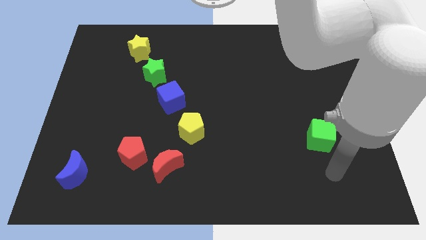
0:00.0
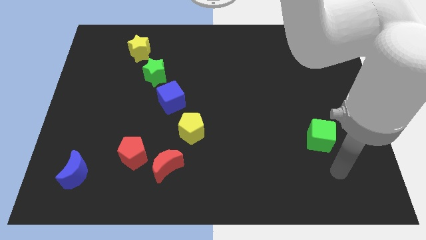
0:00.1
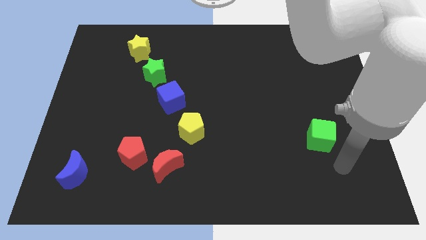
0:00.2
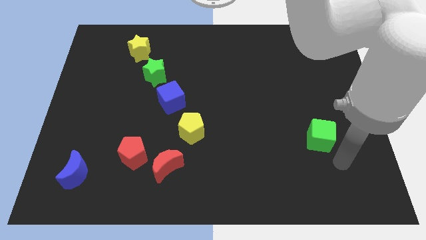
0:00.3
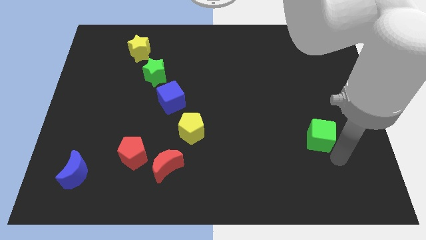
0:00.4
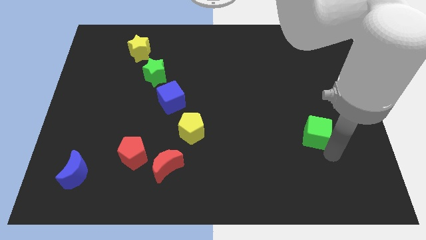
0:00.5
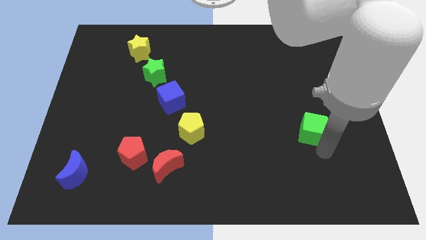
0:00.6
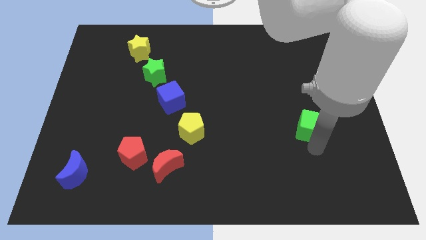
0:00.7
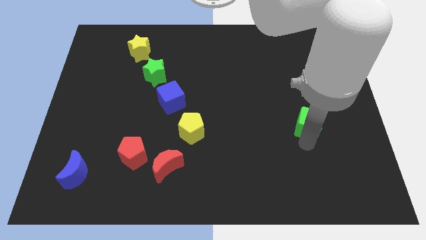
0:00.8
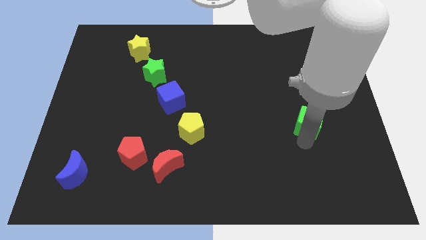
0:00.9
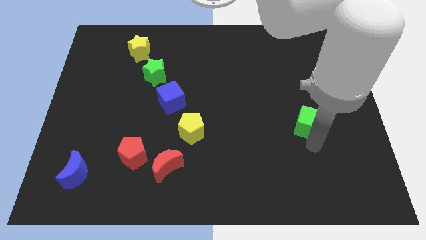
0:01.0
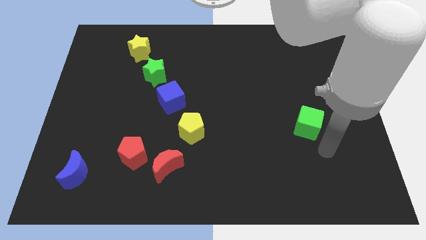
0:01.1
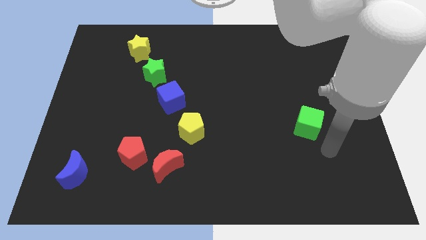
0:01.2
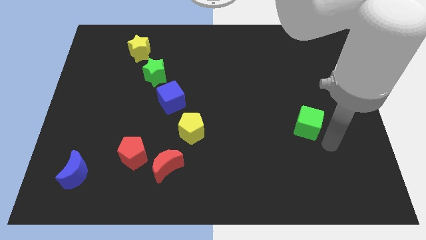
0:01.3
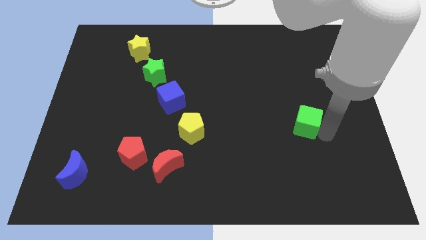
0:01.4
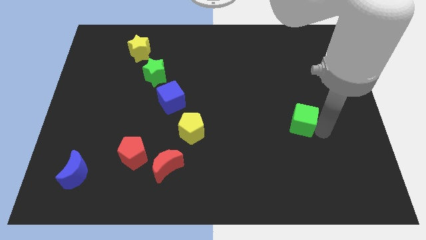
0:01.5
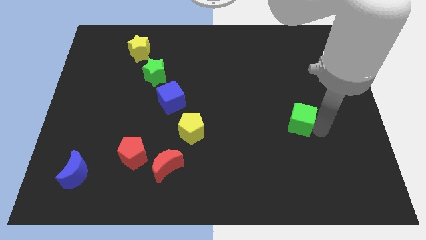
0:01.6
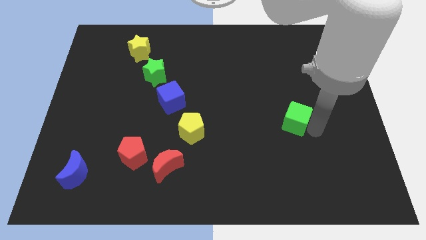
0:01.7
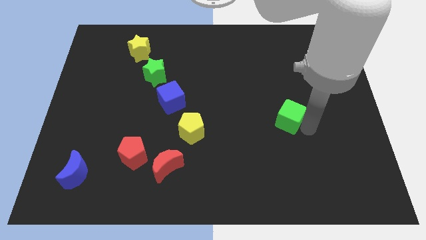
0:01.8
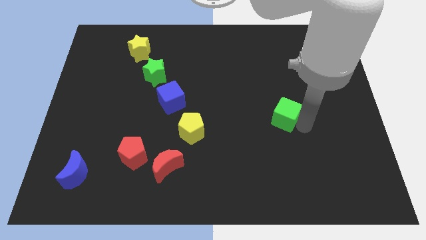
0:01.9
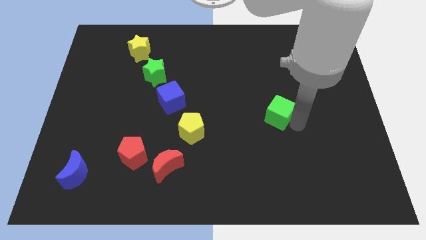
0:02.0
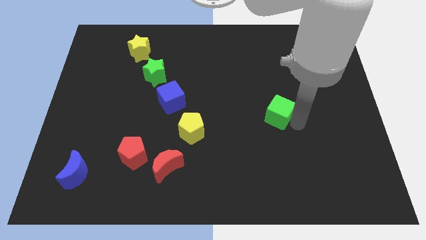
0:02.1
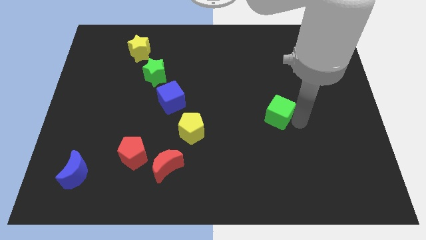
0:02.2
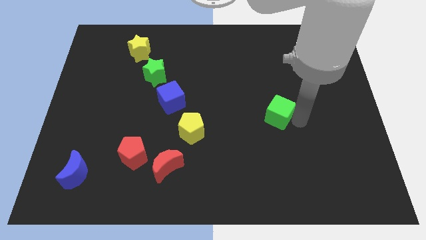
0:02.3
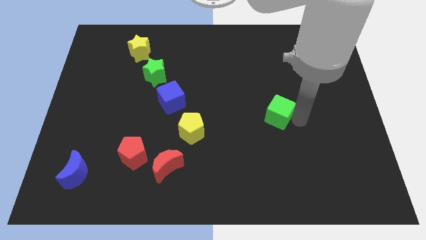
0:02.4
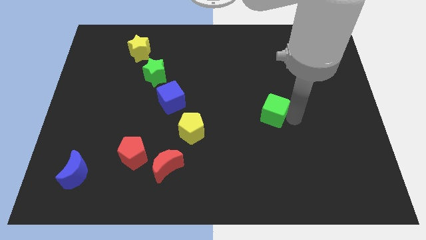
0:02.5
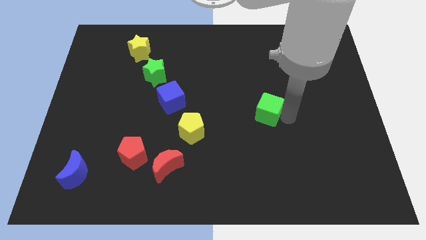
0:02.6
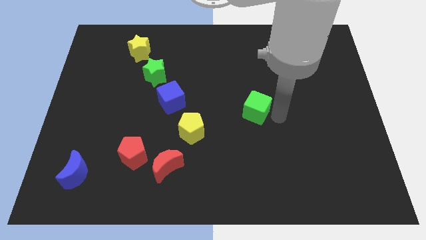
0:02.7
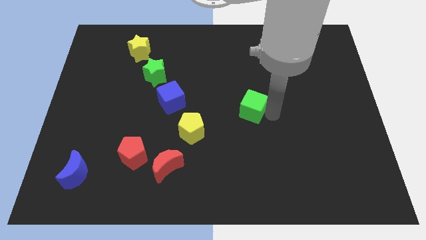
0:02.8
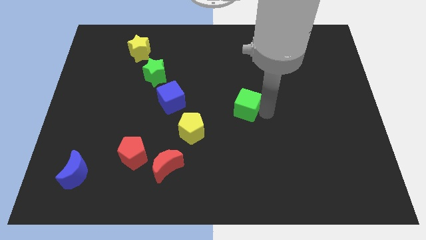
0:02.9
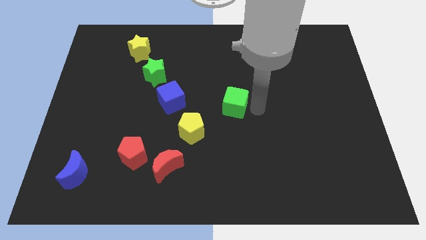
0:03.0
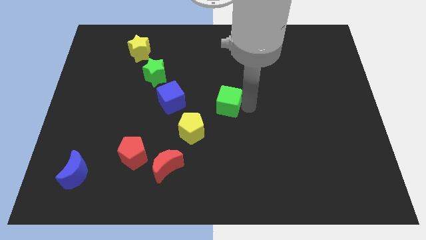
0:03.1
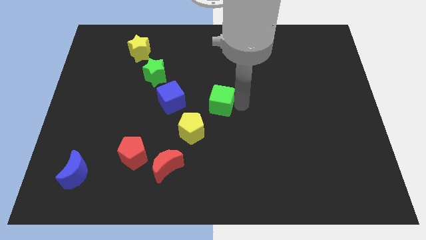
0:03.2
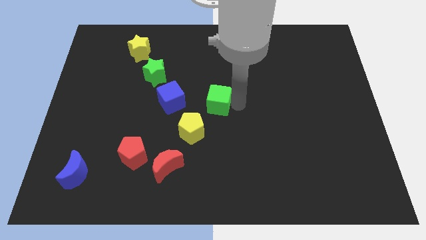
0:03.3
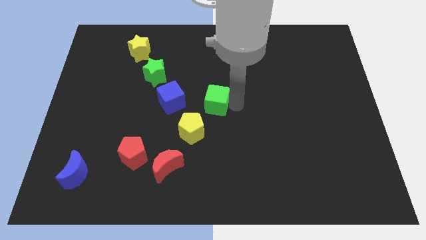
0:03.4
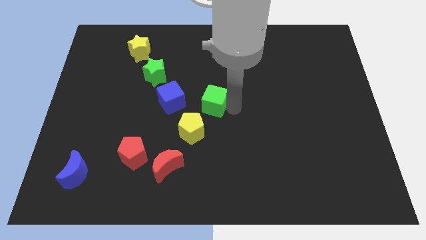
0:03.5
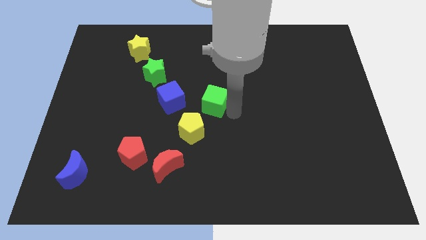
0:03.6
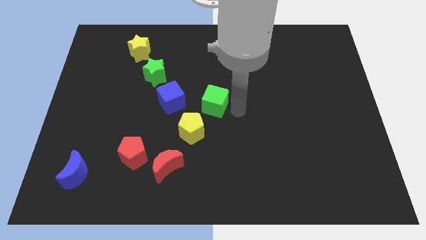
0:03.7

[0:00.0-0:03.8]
put the green cube at the right side of the blue cube

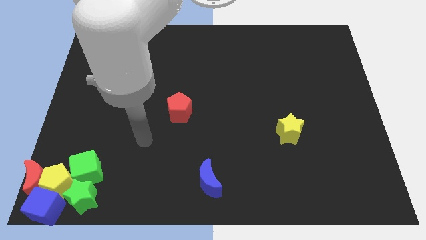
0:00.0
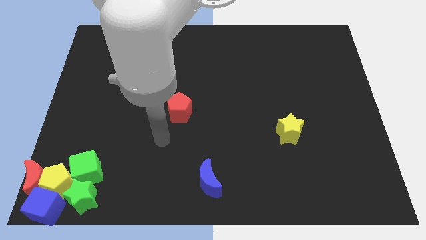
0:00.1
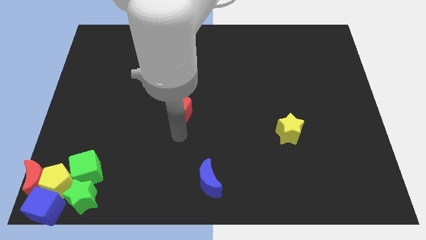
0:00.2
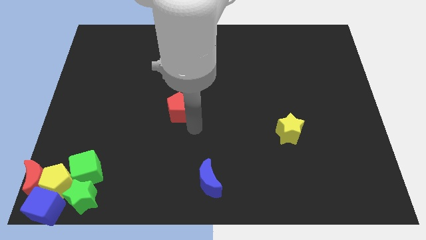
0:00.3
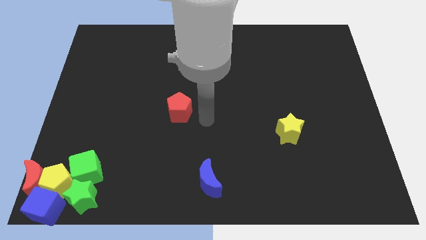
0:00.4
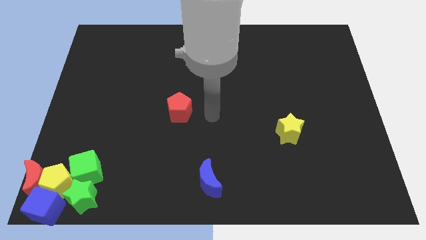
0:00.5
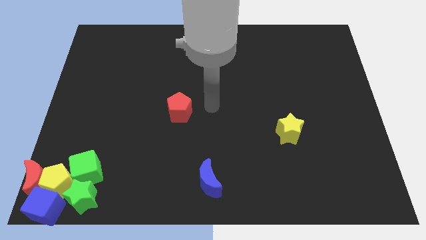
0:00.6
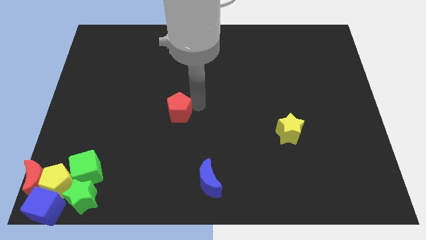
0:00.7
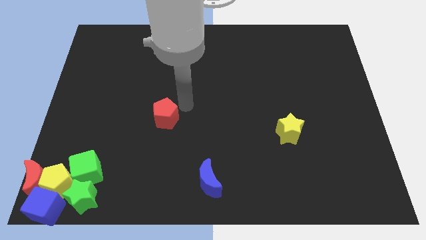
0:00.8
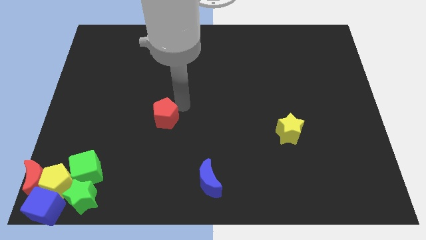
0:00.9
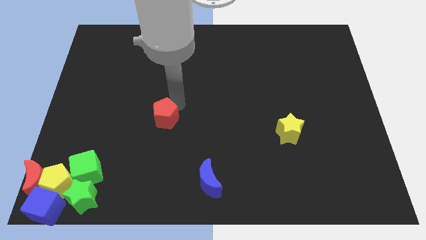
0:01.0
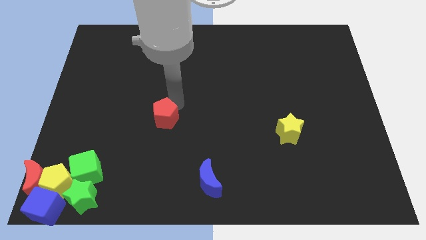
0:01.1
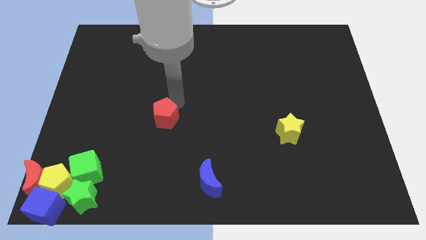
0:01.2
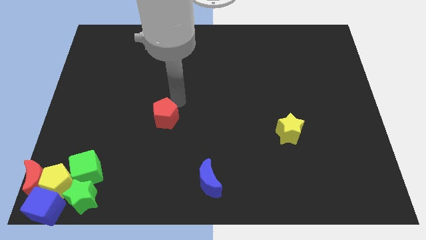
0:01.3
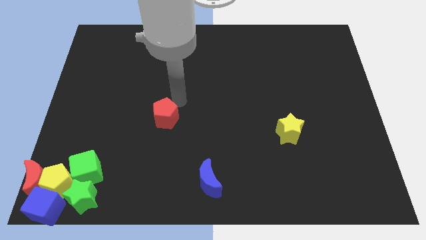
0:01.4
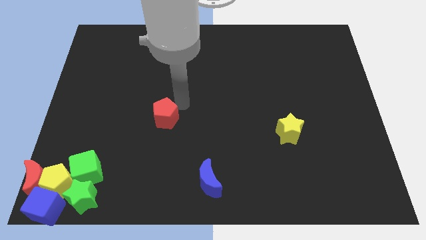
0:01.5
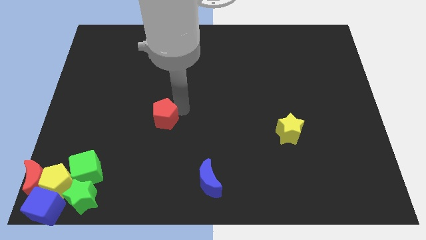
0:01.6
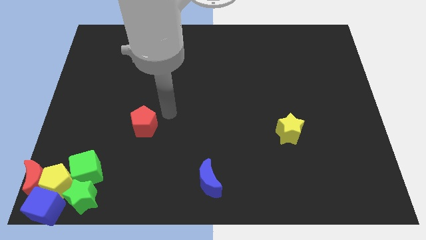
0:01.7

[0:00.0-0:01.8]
push the red pentagon towards down

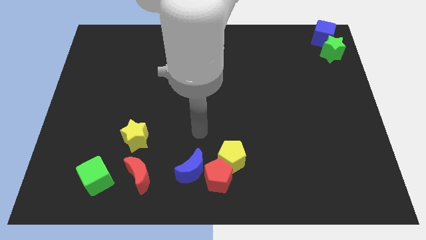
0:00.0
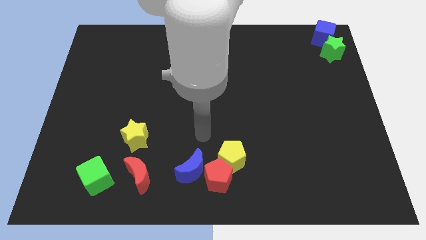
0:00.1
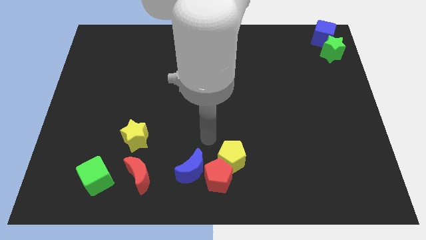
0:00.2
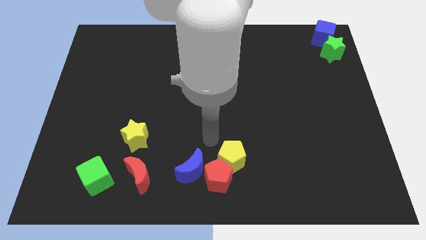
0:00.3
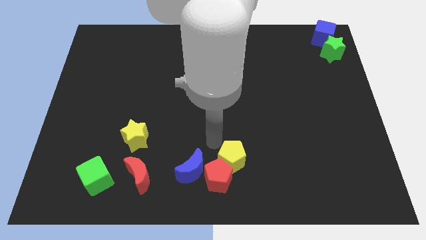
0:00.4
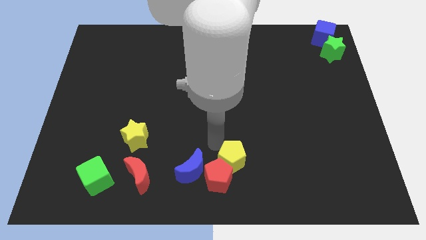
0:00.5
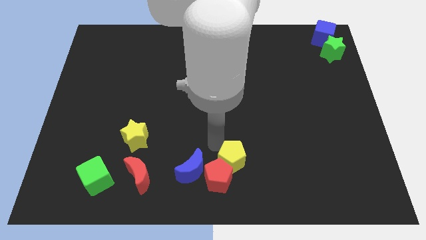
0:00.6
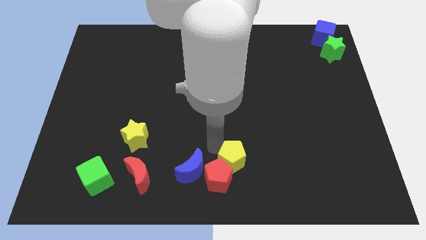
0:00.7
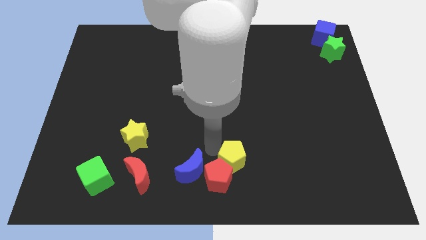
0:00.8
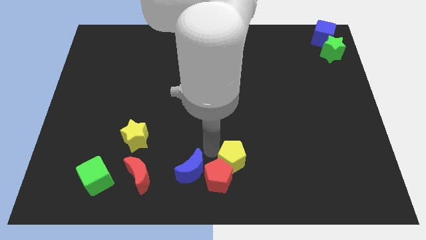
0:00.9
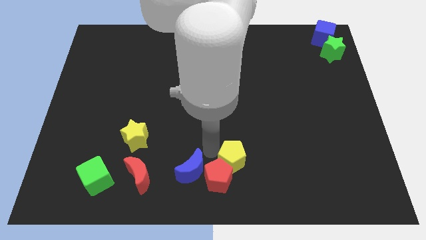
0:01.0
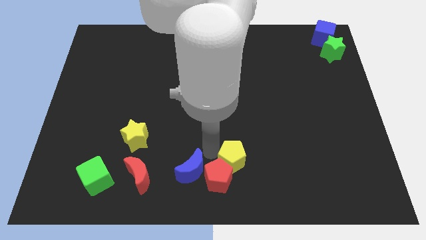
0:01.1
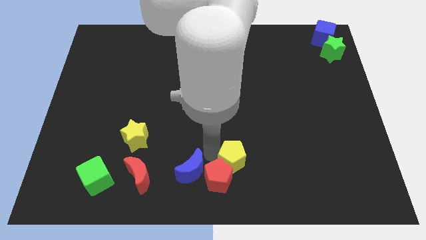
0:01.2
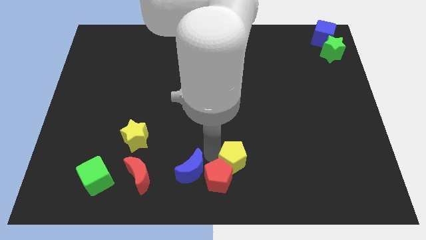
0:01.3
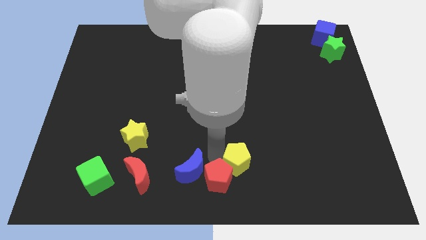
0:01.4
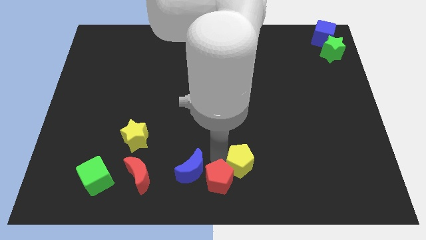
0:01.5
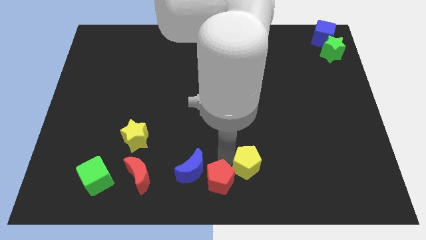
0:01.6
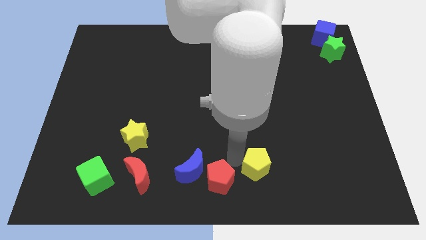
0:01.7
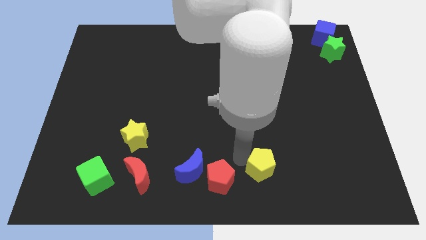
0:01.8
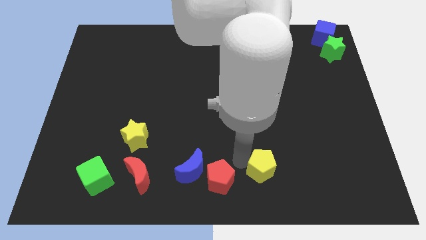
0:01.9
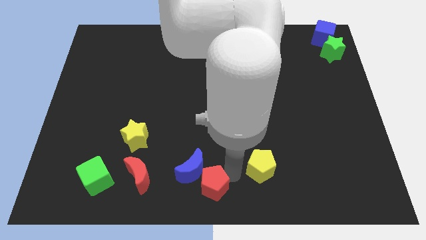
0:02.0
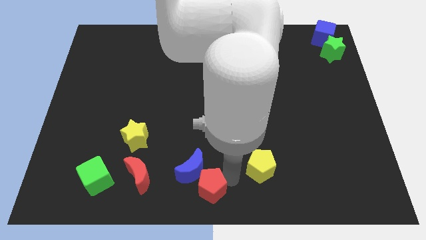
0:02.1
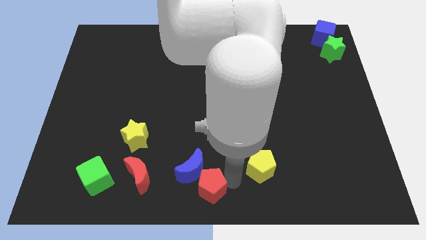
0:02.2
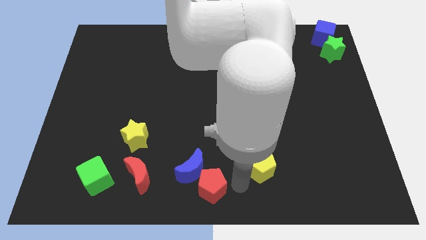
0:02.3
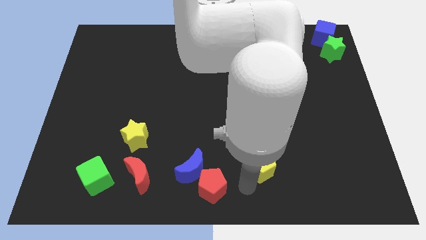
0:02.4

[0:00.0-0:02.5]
separate the red pentagon and the yellow pentagon

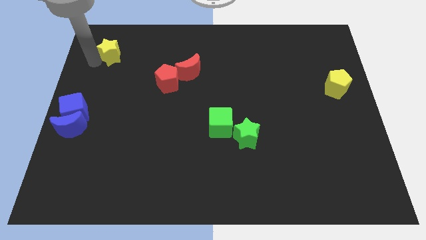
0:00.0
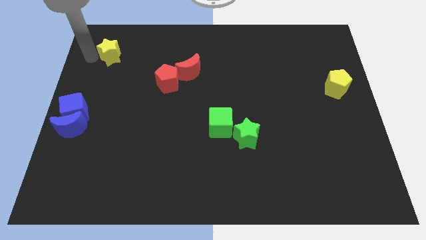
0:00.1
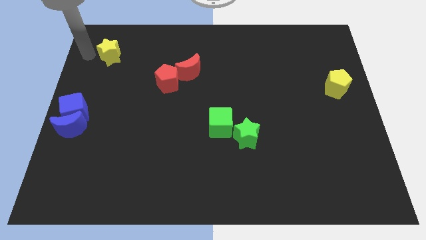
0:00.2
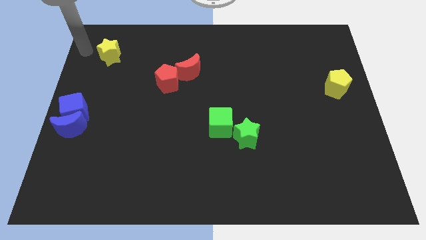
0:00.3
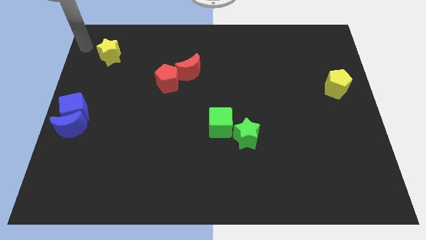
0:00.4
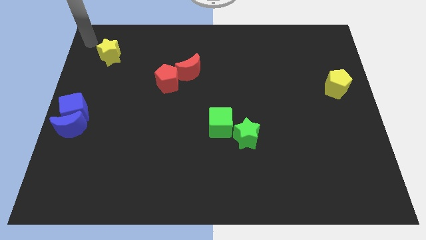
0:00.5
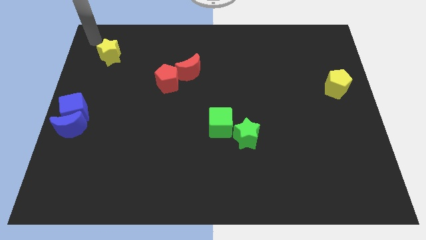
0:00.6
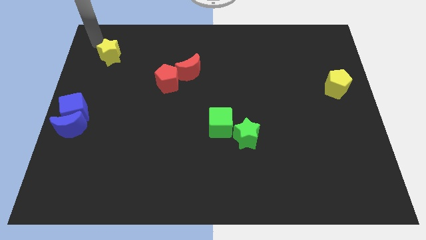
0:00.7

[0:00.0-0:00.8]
move your arm to the top left of the board
